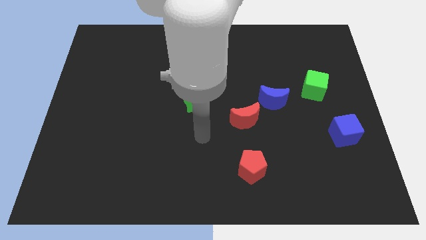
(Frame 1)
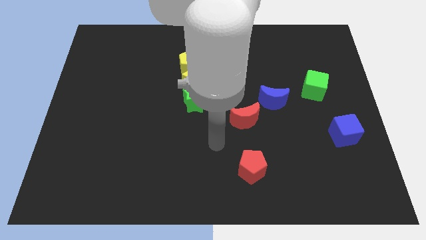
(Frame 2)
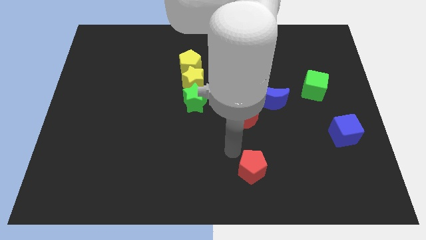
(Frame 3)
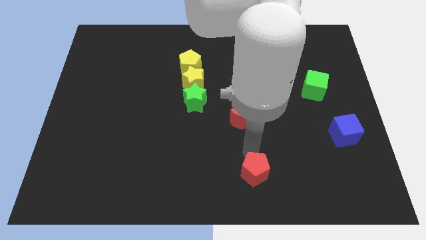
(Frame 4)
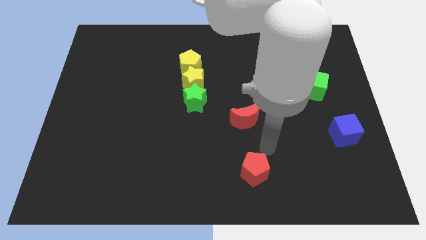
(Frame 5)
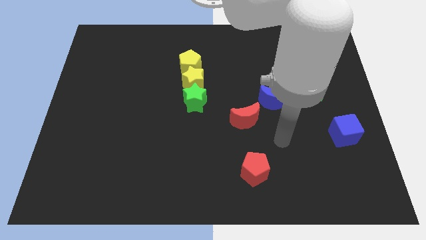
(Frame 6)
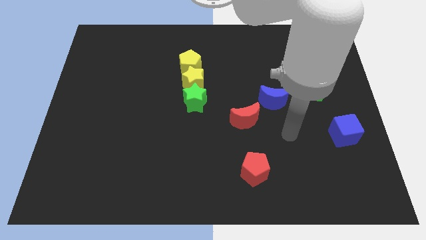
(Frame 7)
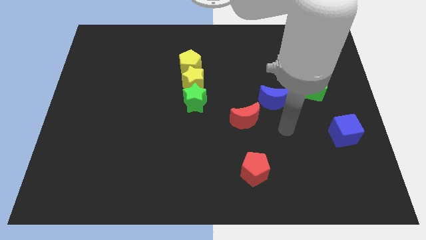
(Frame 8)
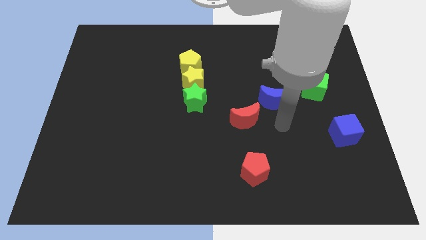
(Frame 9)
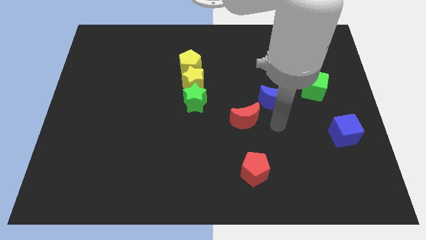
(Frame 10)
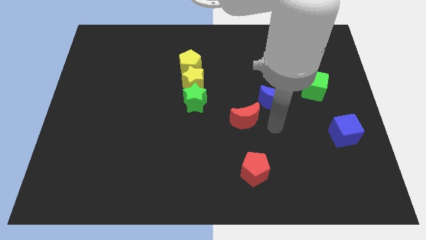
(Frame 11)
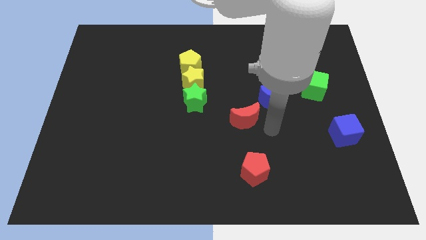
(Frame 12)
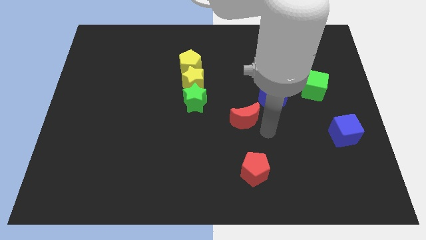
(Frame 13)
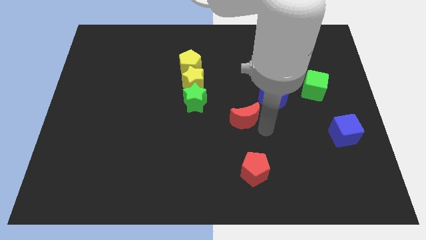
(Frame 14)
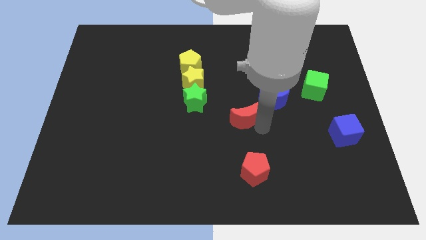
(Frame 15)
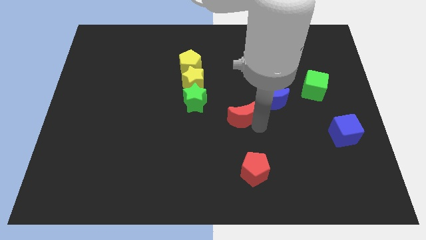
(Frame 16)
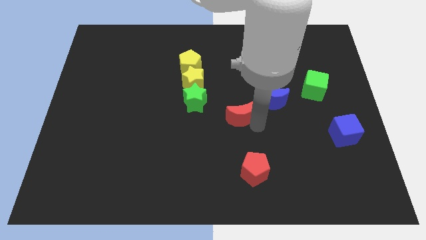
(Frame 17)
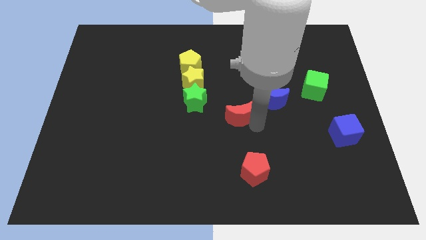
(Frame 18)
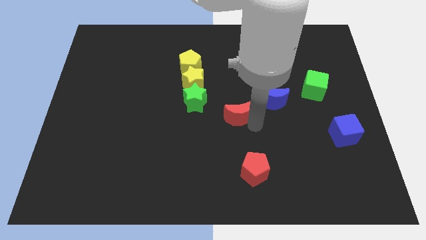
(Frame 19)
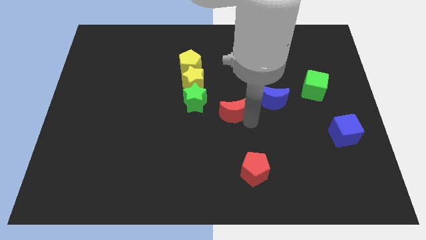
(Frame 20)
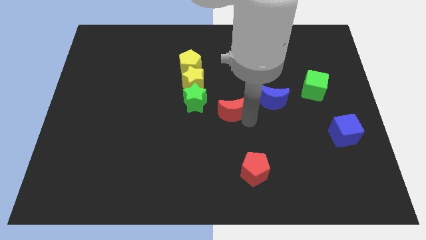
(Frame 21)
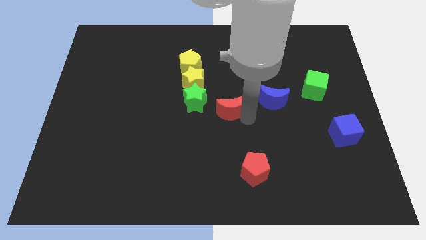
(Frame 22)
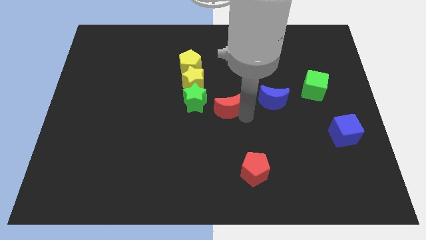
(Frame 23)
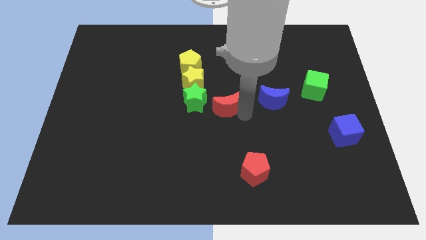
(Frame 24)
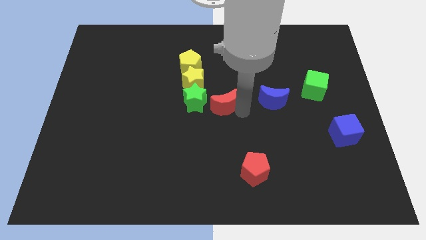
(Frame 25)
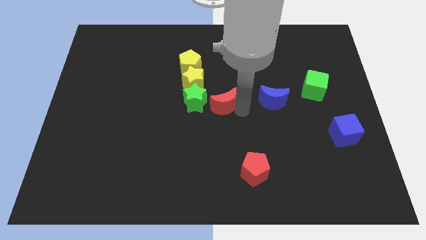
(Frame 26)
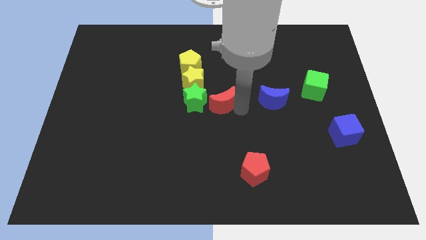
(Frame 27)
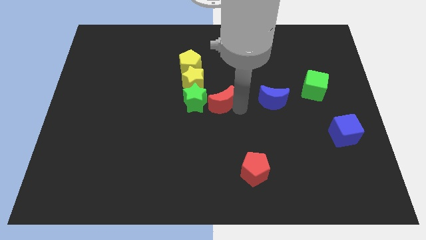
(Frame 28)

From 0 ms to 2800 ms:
place the red moon in between the blue moon and green star

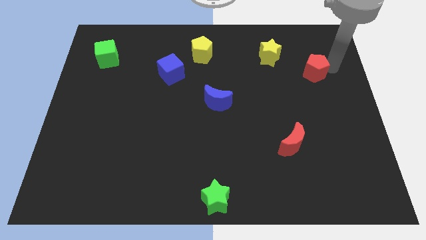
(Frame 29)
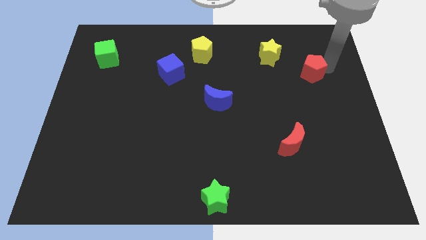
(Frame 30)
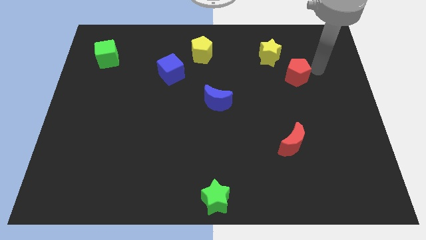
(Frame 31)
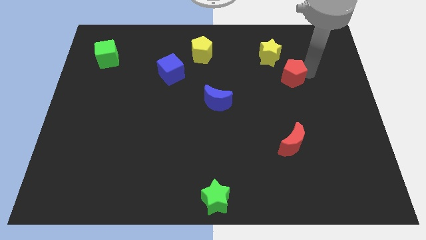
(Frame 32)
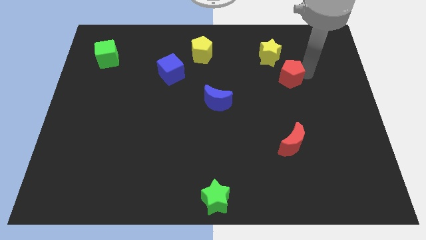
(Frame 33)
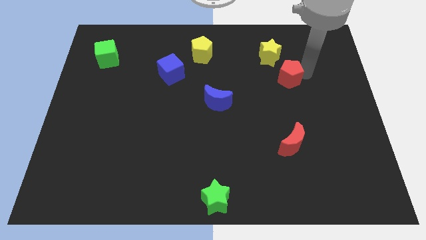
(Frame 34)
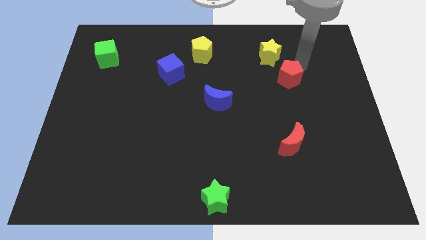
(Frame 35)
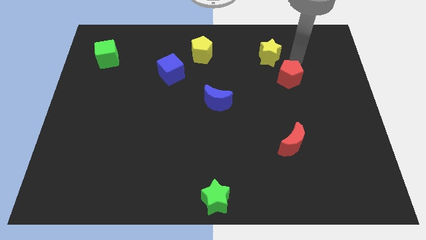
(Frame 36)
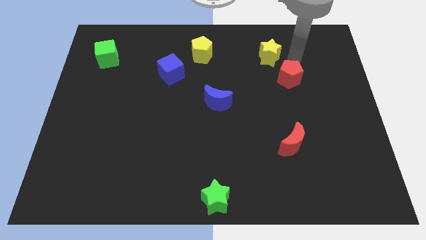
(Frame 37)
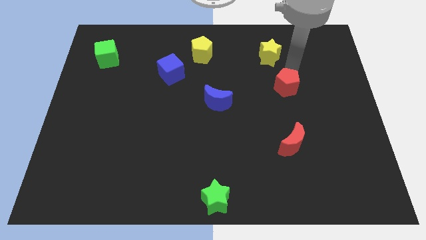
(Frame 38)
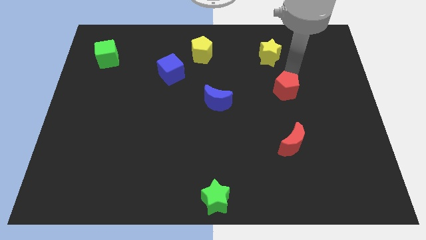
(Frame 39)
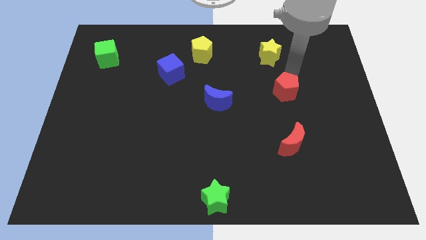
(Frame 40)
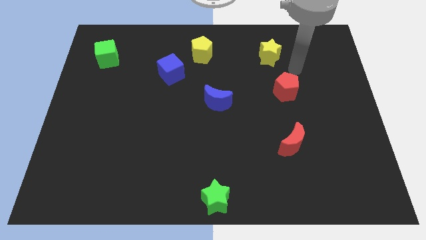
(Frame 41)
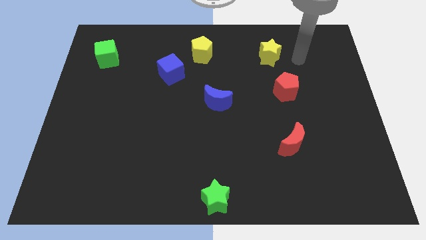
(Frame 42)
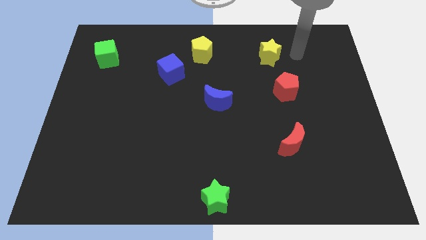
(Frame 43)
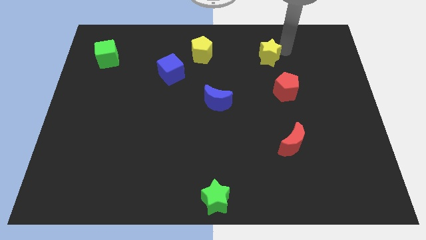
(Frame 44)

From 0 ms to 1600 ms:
move red pentagon close to the red crescent

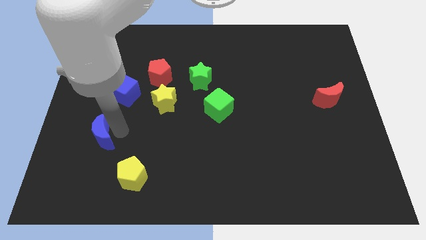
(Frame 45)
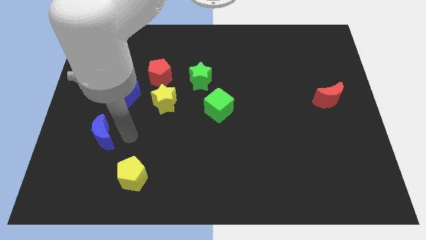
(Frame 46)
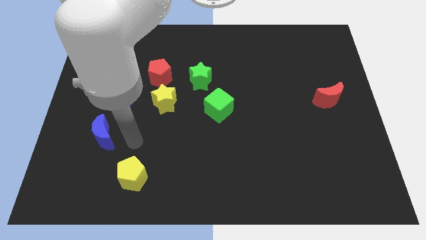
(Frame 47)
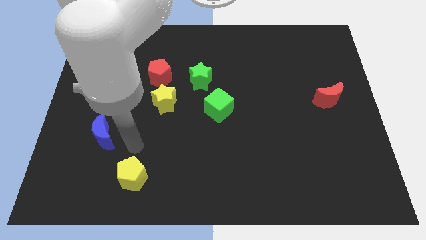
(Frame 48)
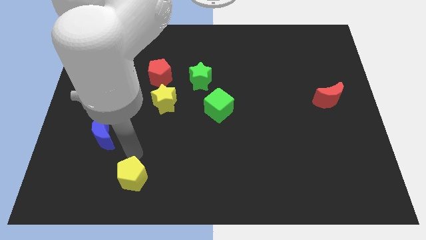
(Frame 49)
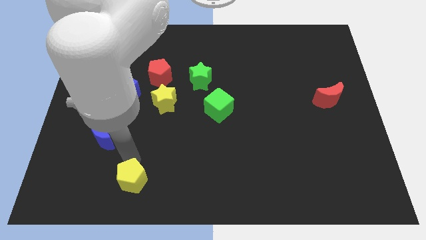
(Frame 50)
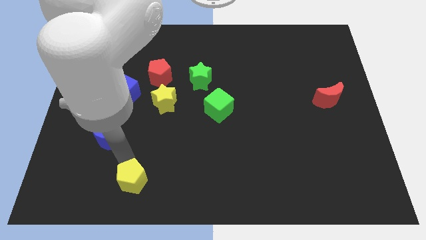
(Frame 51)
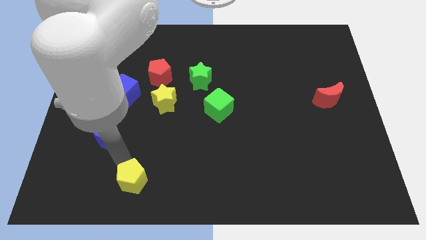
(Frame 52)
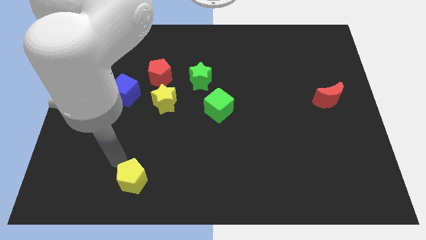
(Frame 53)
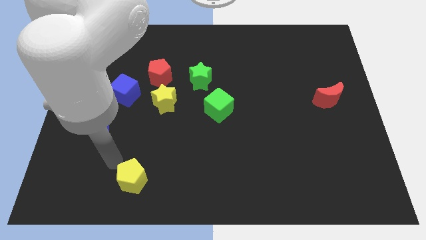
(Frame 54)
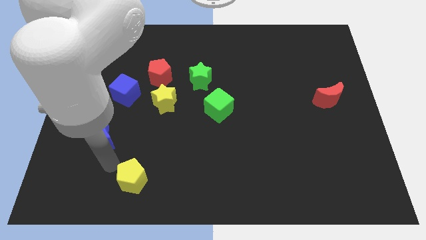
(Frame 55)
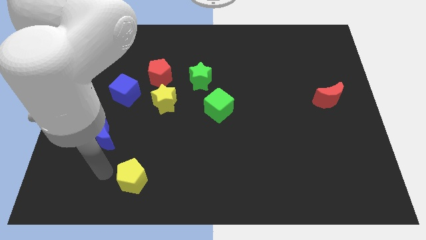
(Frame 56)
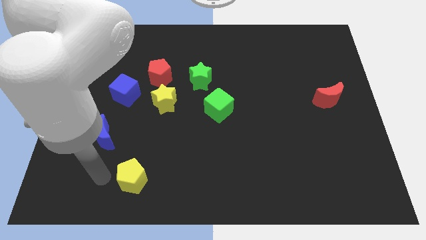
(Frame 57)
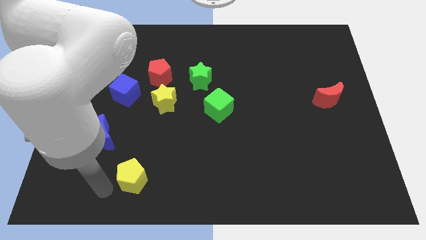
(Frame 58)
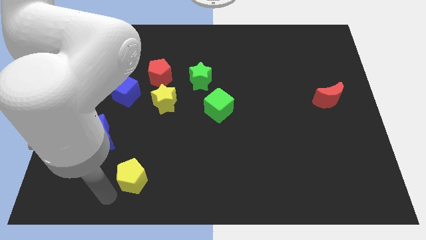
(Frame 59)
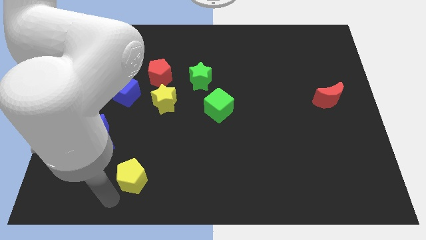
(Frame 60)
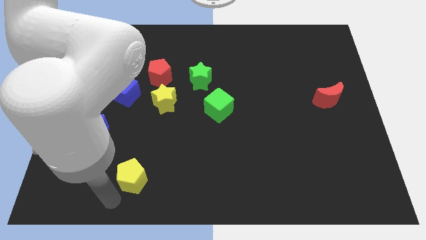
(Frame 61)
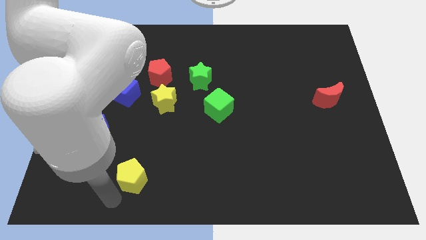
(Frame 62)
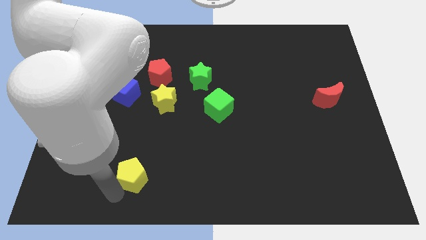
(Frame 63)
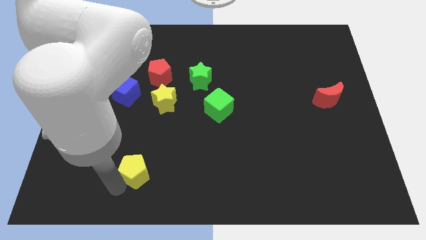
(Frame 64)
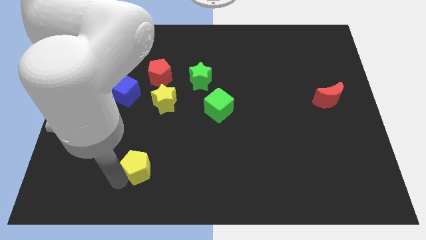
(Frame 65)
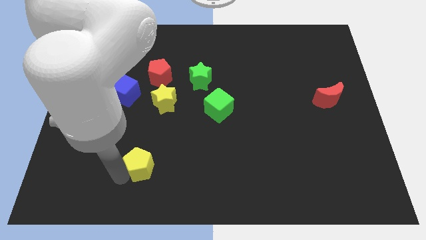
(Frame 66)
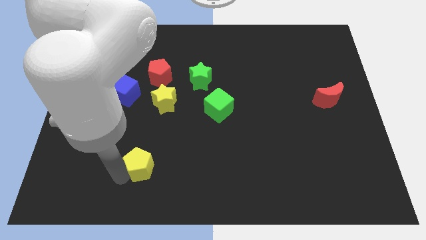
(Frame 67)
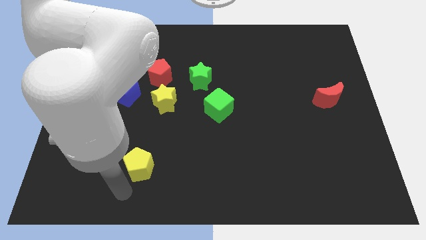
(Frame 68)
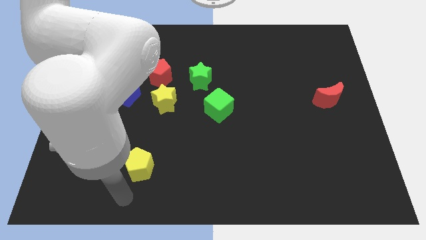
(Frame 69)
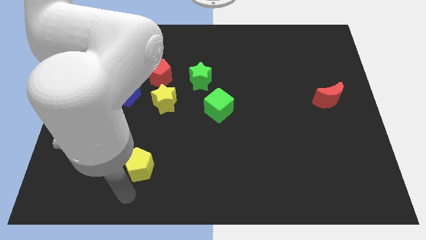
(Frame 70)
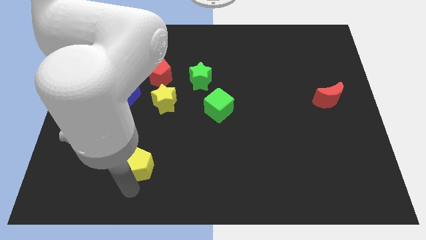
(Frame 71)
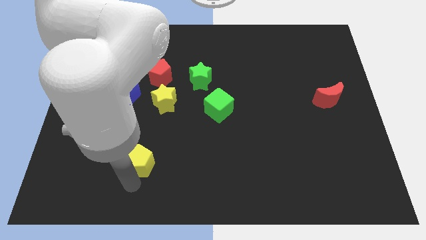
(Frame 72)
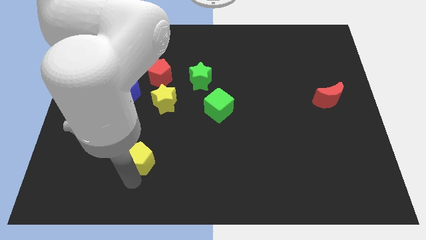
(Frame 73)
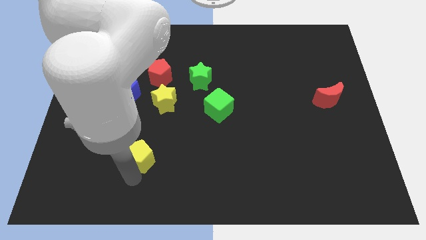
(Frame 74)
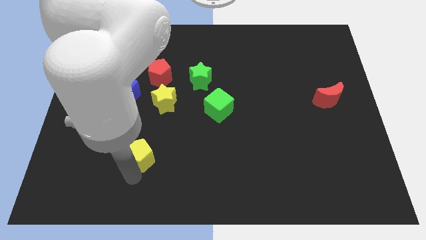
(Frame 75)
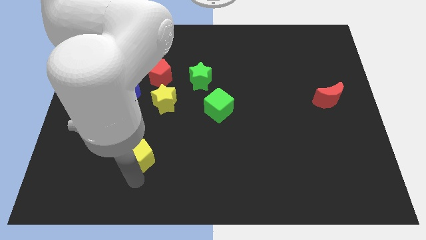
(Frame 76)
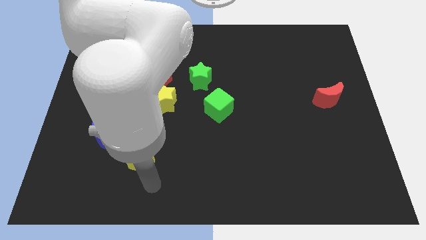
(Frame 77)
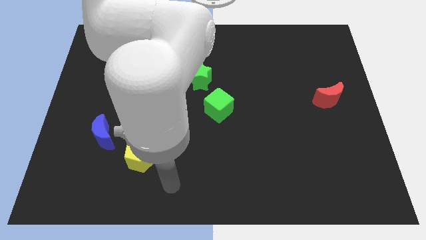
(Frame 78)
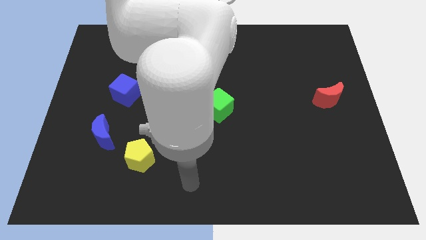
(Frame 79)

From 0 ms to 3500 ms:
push yellow pentagon slightly towards up

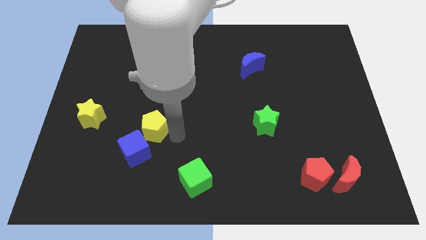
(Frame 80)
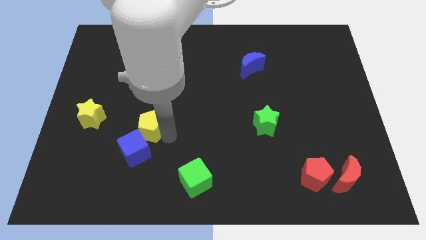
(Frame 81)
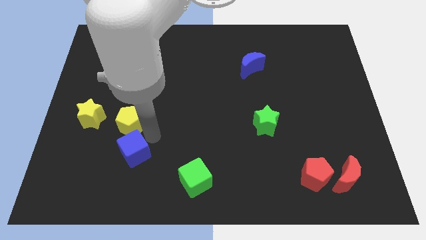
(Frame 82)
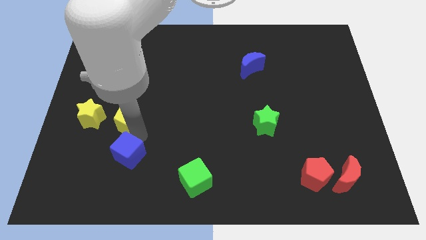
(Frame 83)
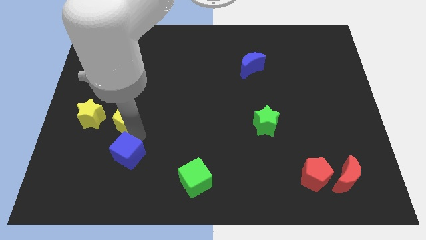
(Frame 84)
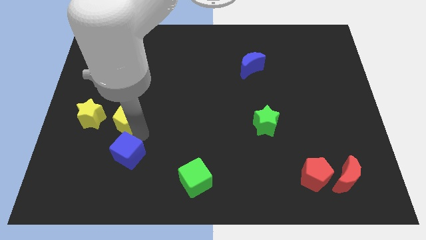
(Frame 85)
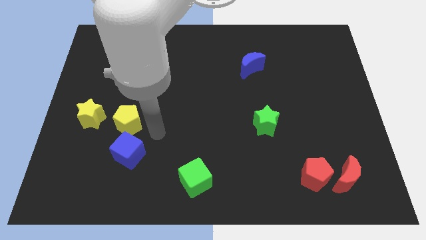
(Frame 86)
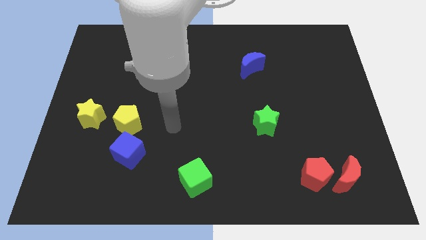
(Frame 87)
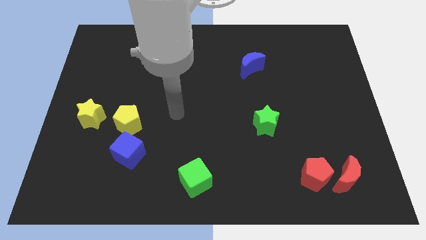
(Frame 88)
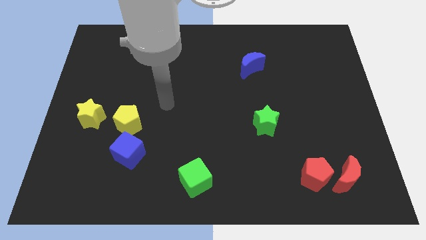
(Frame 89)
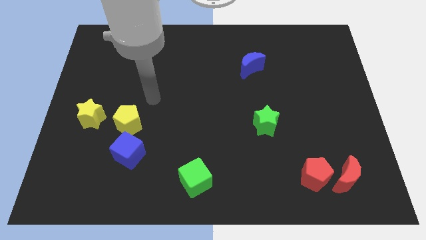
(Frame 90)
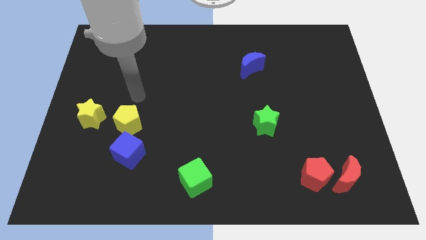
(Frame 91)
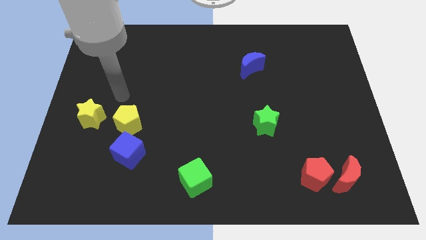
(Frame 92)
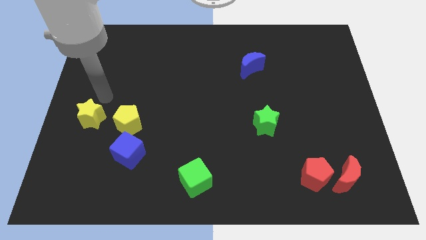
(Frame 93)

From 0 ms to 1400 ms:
move the yellow pentagon towards yellow star
